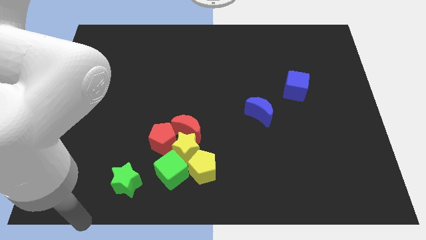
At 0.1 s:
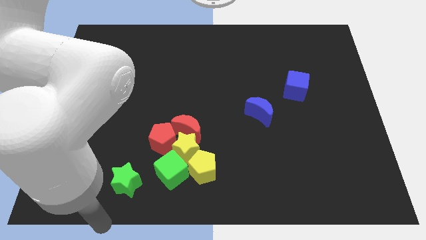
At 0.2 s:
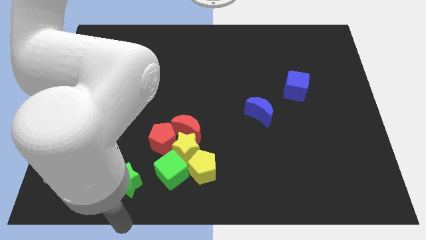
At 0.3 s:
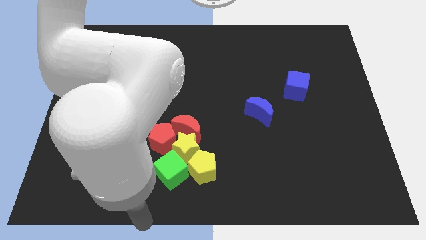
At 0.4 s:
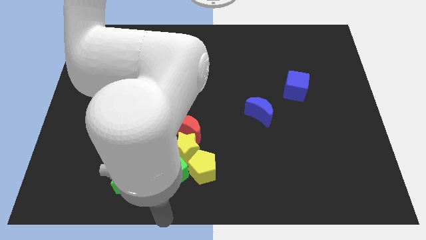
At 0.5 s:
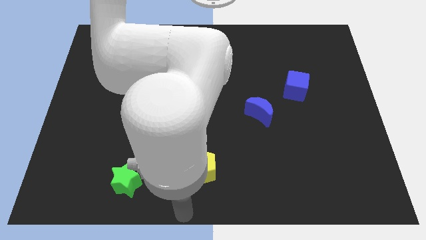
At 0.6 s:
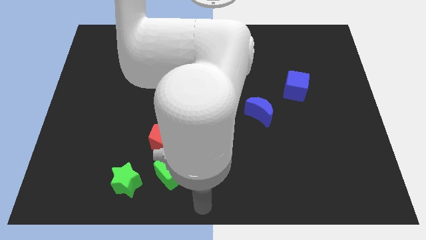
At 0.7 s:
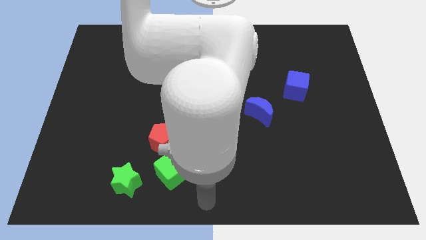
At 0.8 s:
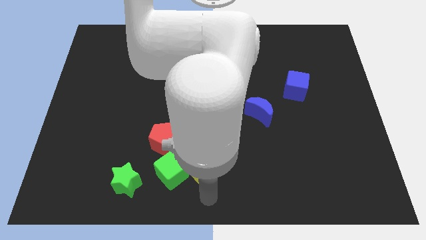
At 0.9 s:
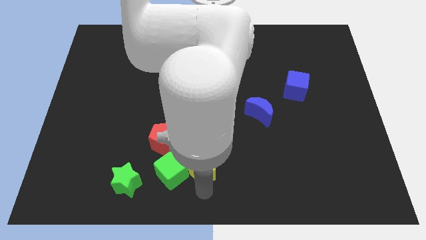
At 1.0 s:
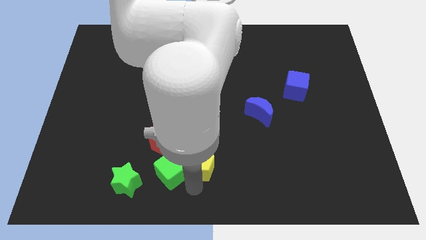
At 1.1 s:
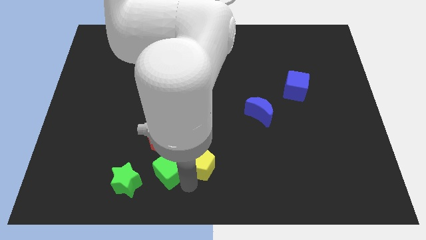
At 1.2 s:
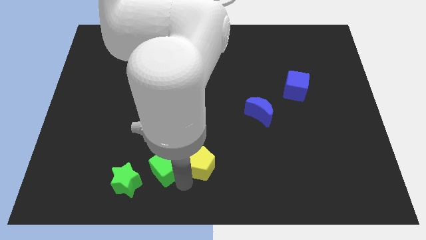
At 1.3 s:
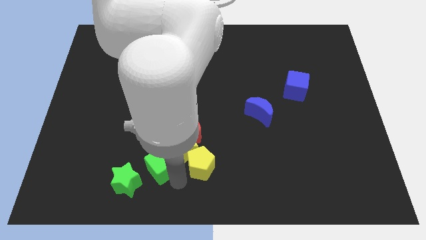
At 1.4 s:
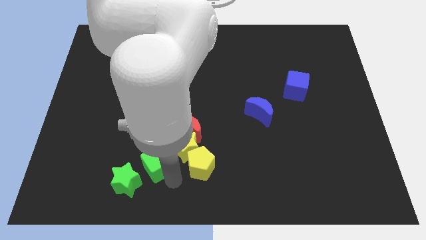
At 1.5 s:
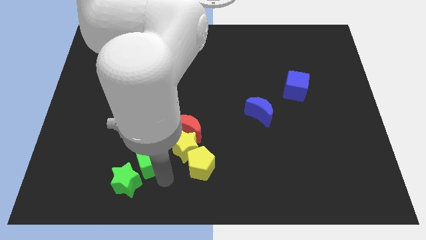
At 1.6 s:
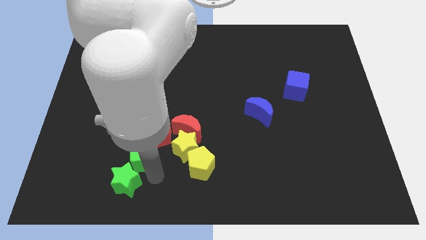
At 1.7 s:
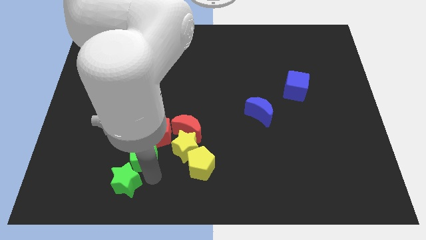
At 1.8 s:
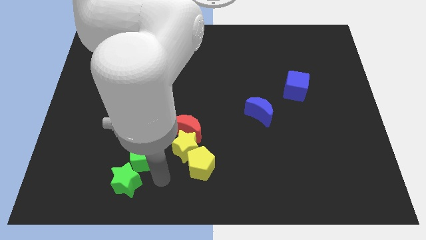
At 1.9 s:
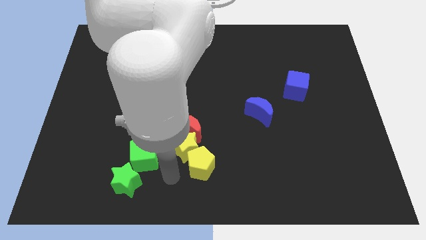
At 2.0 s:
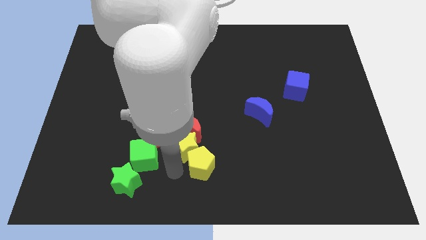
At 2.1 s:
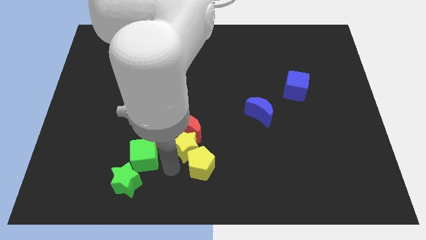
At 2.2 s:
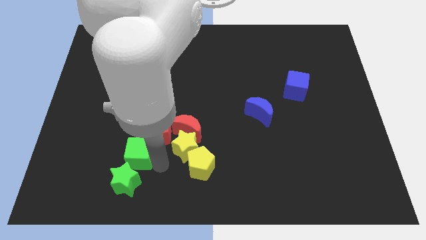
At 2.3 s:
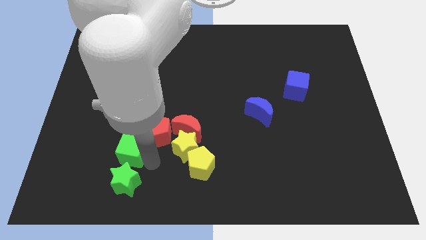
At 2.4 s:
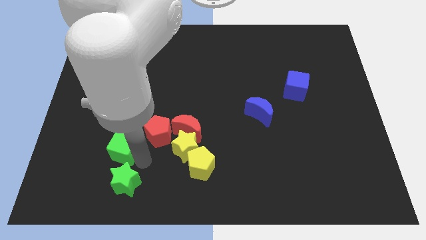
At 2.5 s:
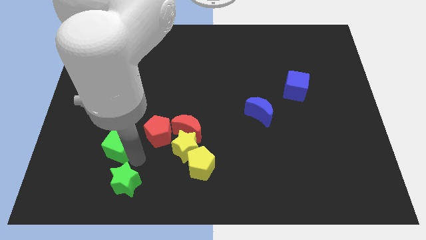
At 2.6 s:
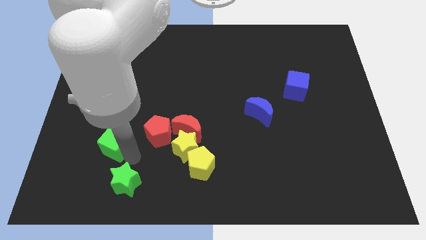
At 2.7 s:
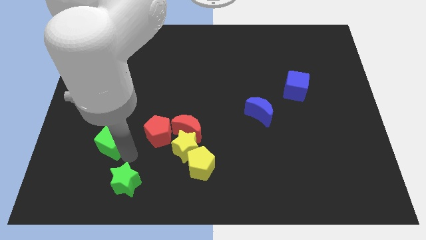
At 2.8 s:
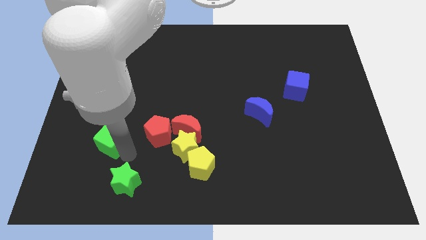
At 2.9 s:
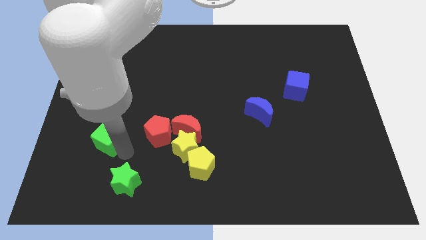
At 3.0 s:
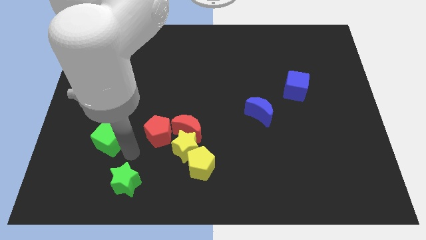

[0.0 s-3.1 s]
separate the green cube from the yellow blocks

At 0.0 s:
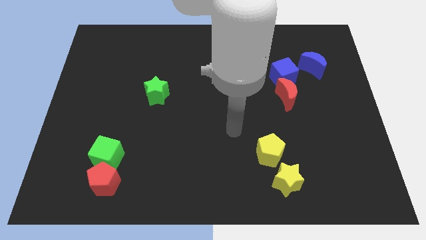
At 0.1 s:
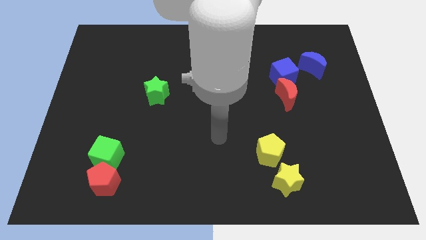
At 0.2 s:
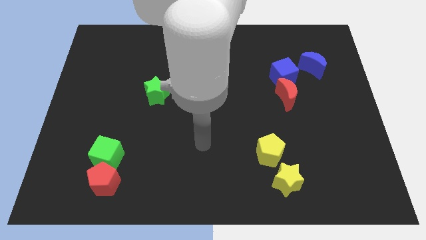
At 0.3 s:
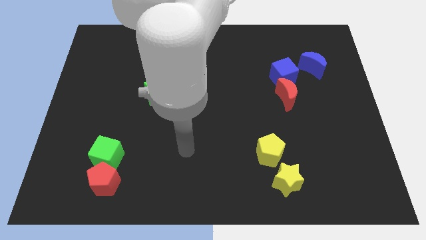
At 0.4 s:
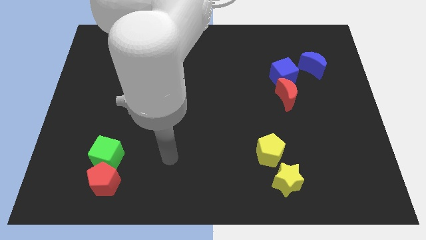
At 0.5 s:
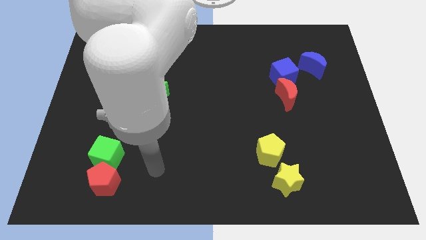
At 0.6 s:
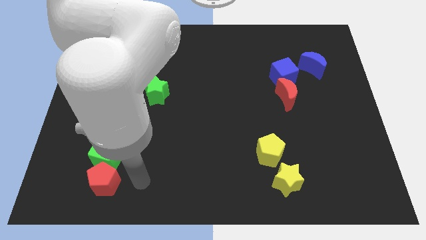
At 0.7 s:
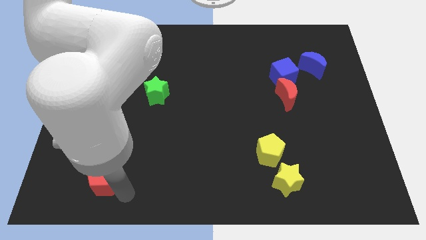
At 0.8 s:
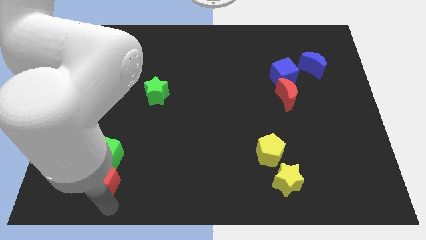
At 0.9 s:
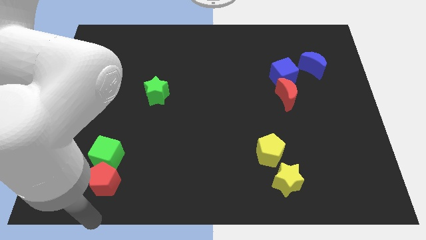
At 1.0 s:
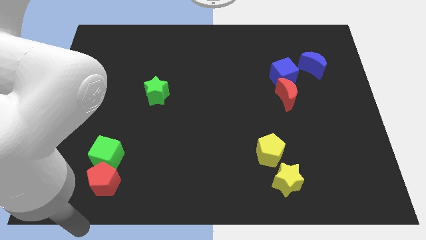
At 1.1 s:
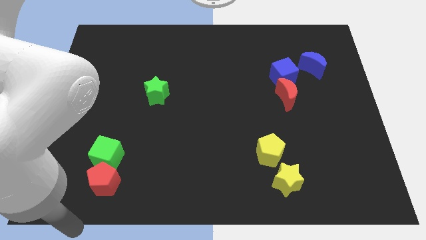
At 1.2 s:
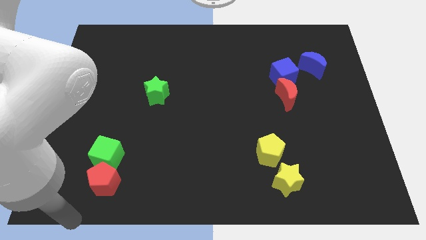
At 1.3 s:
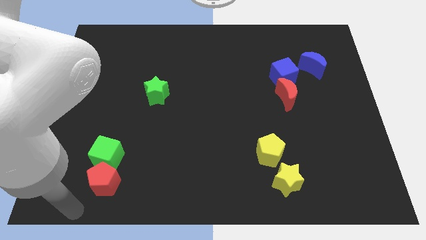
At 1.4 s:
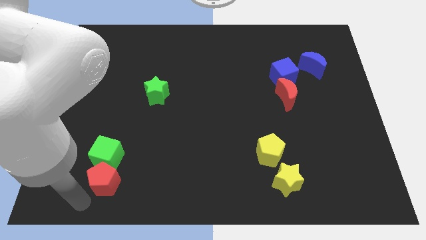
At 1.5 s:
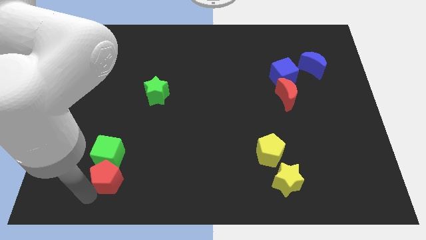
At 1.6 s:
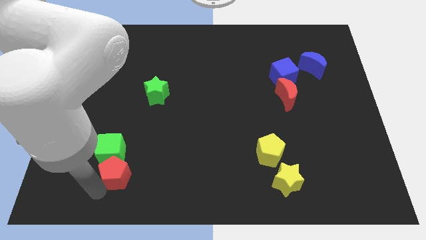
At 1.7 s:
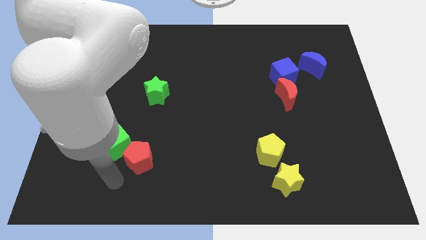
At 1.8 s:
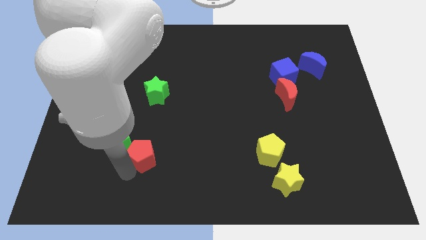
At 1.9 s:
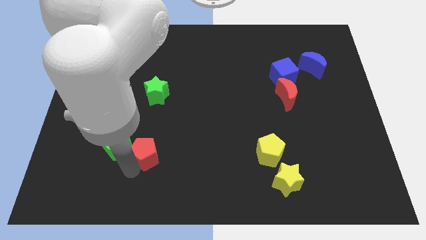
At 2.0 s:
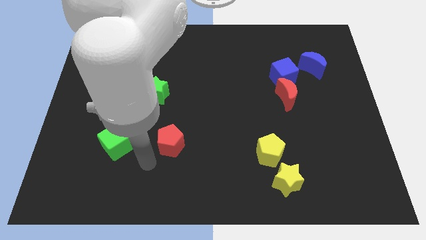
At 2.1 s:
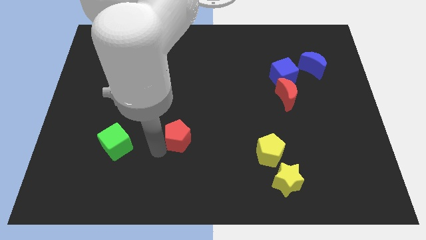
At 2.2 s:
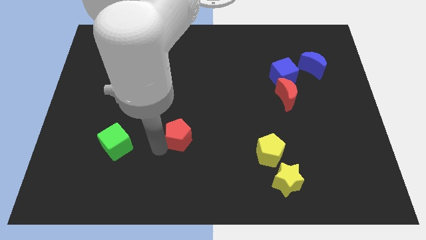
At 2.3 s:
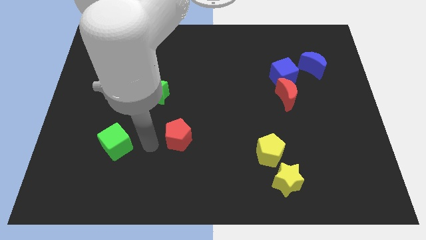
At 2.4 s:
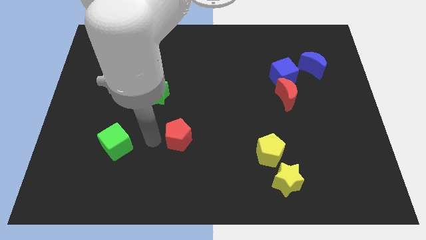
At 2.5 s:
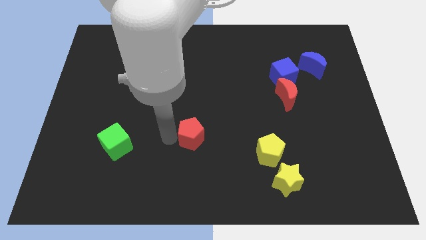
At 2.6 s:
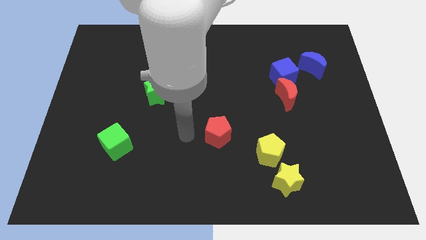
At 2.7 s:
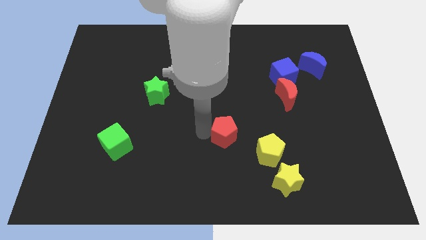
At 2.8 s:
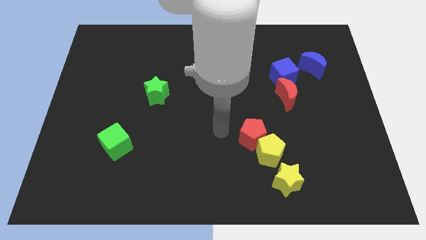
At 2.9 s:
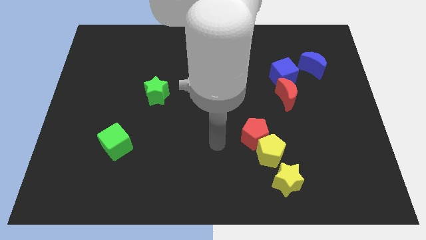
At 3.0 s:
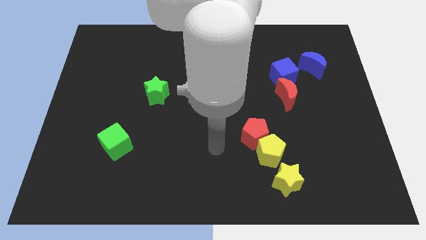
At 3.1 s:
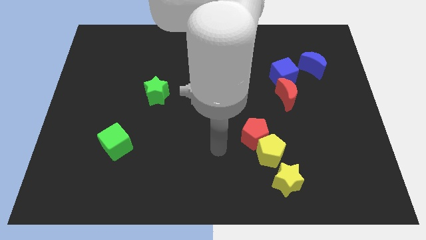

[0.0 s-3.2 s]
move the red pentagon to the top of the yellow pentagon

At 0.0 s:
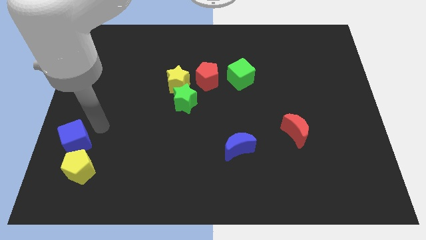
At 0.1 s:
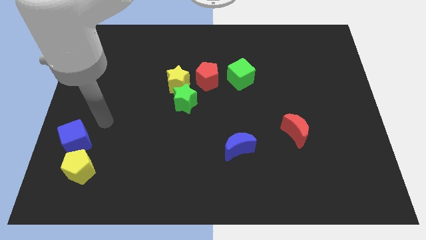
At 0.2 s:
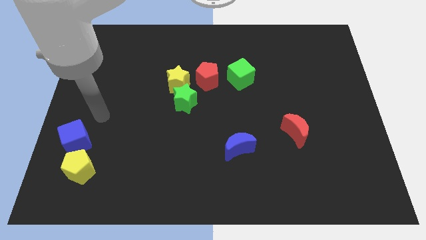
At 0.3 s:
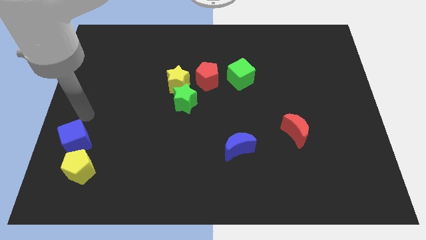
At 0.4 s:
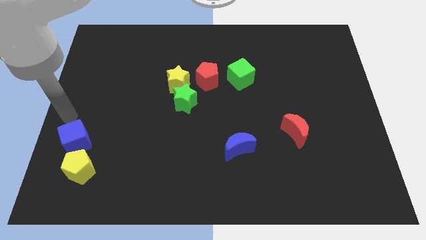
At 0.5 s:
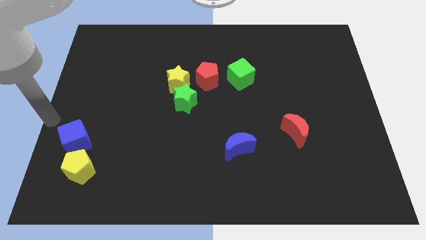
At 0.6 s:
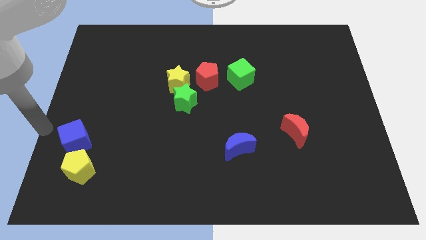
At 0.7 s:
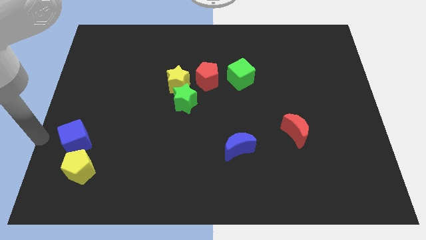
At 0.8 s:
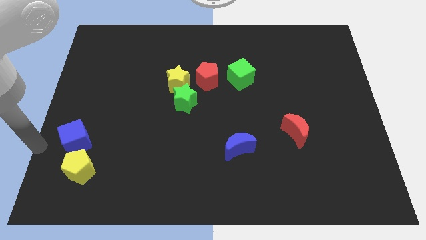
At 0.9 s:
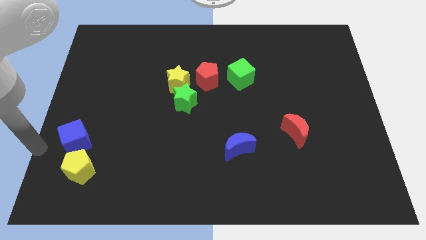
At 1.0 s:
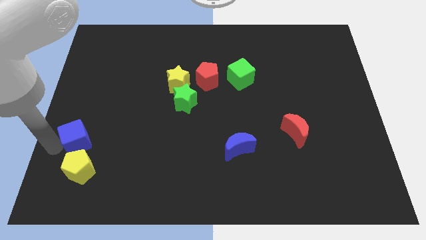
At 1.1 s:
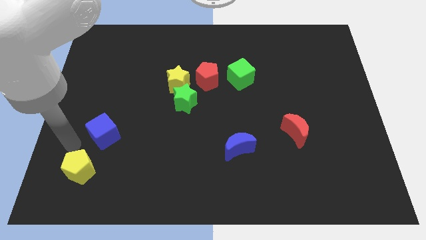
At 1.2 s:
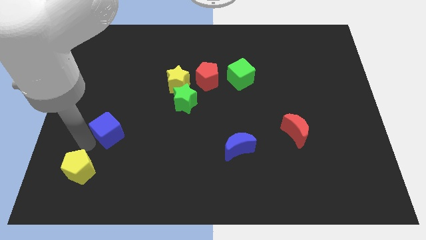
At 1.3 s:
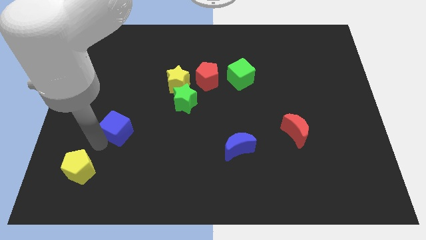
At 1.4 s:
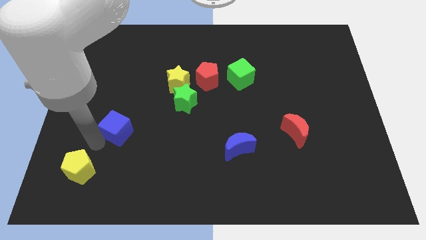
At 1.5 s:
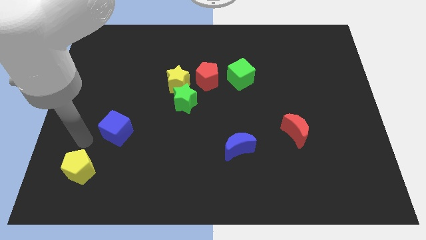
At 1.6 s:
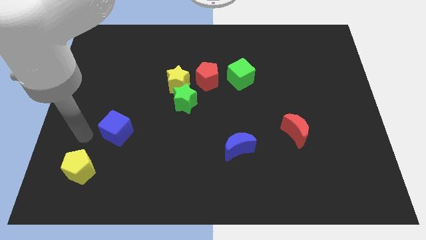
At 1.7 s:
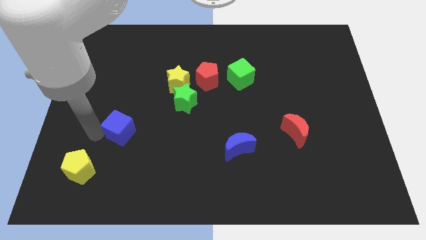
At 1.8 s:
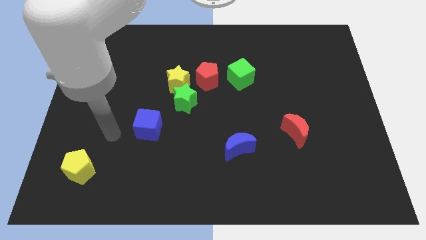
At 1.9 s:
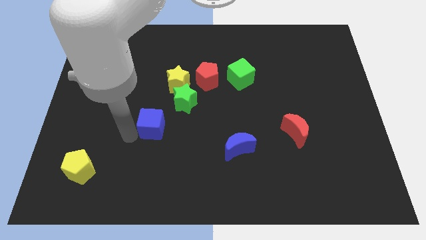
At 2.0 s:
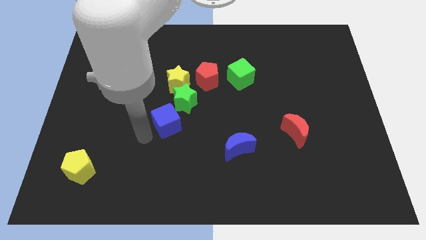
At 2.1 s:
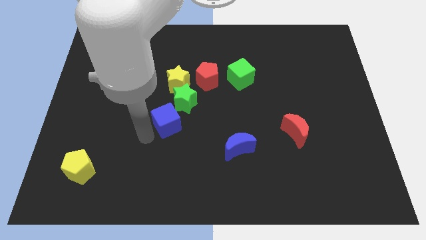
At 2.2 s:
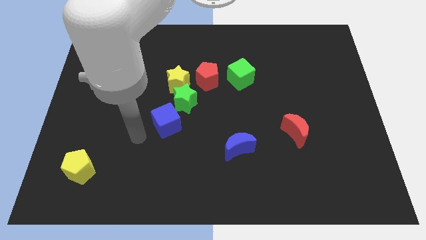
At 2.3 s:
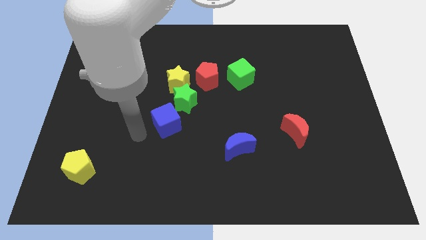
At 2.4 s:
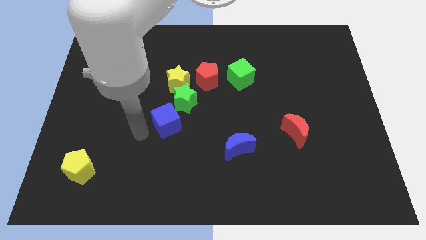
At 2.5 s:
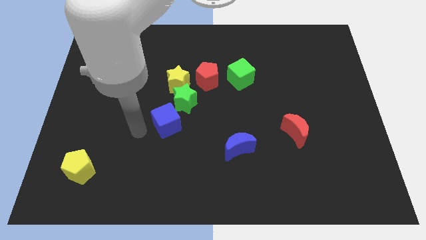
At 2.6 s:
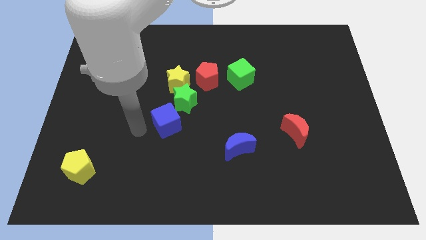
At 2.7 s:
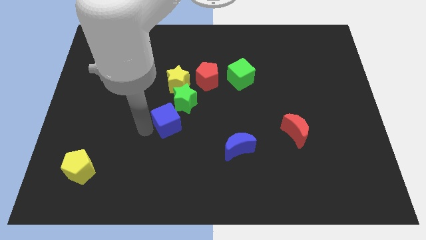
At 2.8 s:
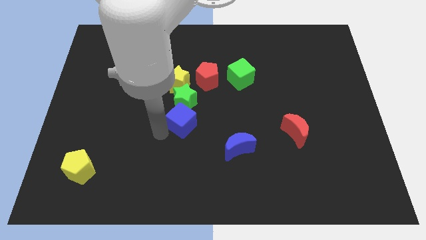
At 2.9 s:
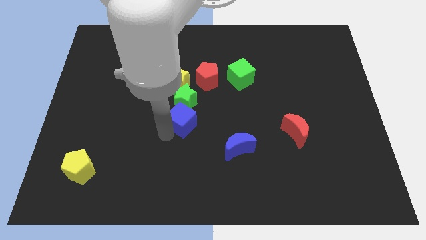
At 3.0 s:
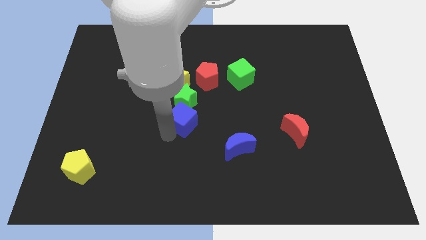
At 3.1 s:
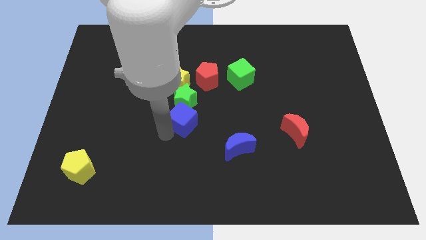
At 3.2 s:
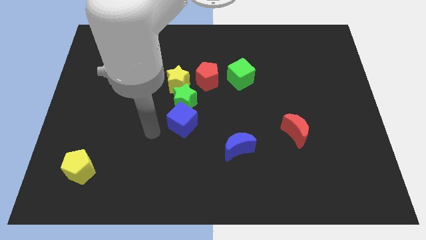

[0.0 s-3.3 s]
slide the blue cube to the bottom of the green star
